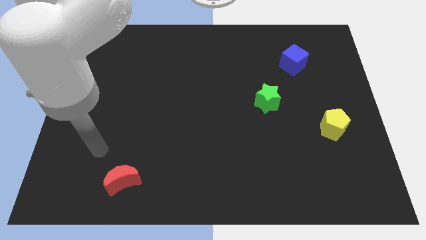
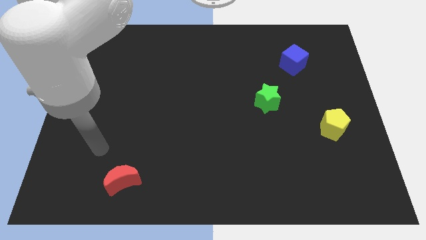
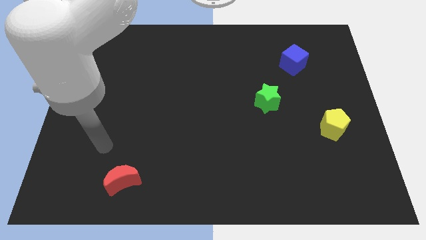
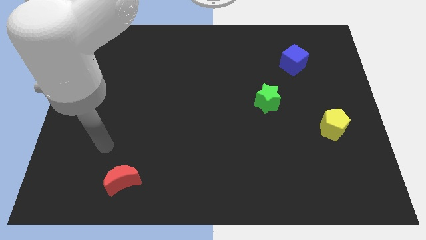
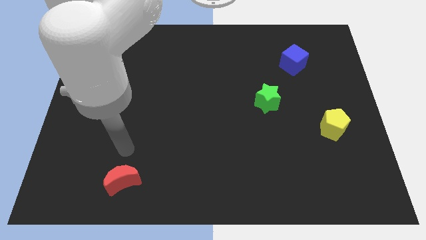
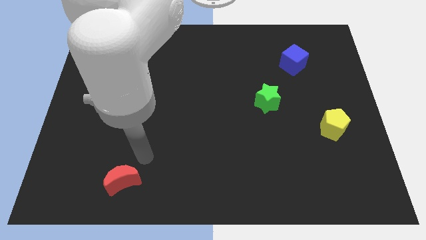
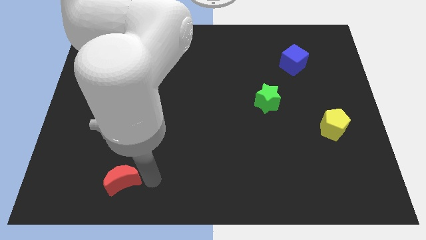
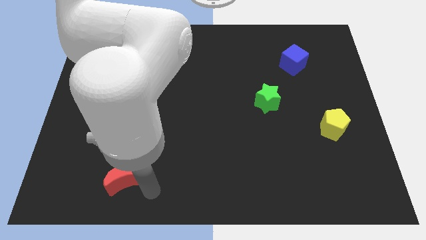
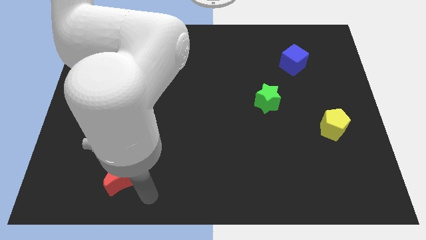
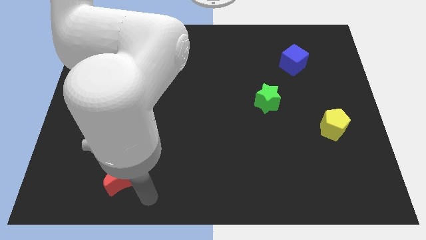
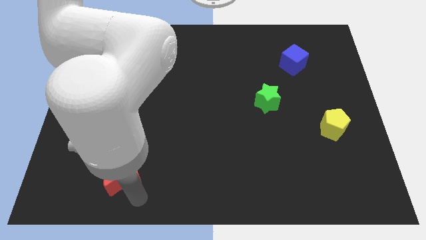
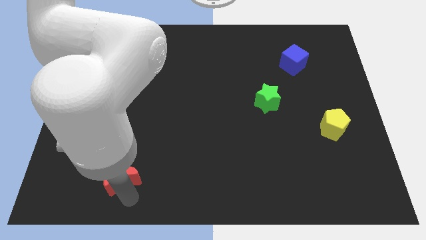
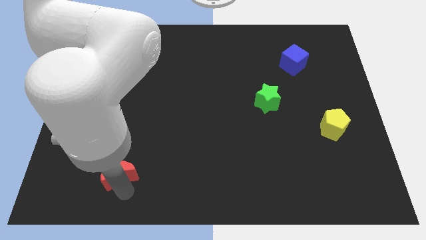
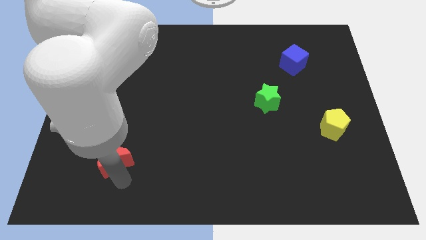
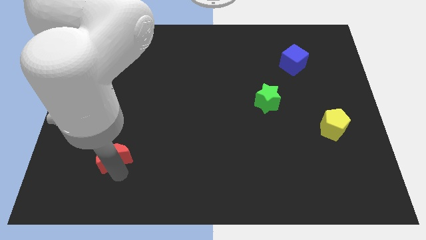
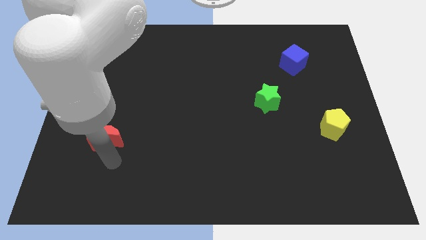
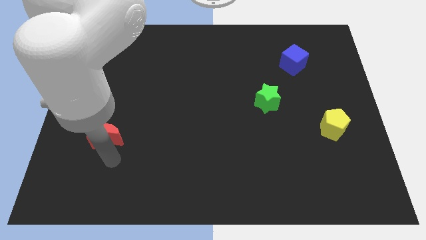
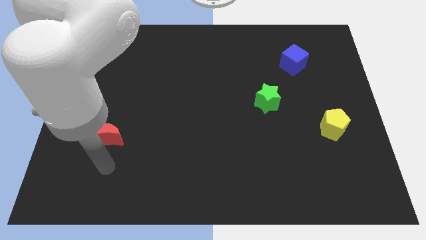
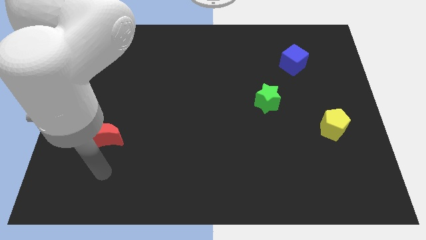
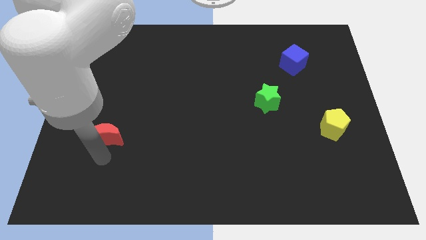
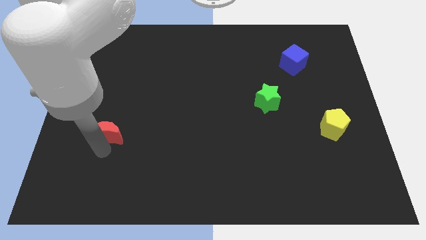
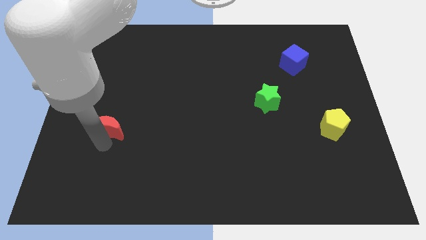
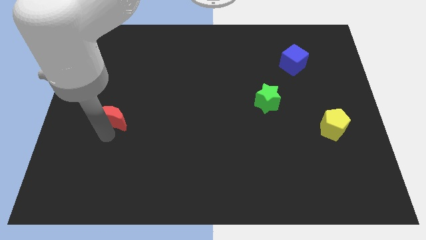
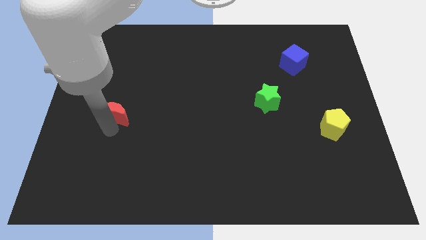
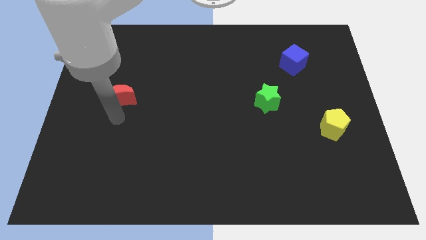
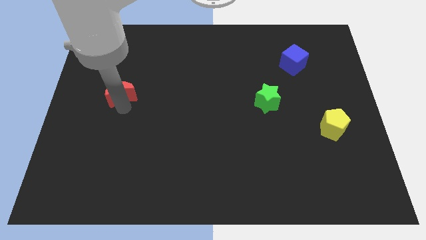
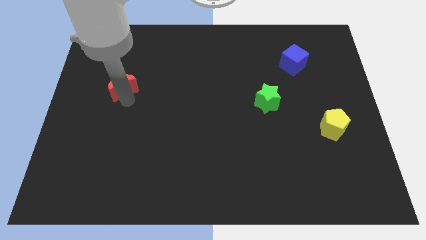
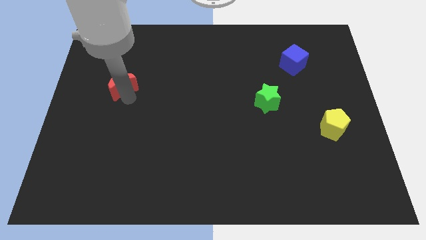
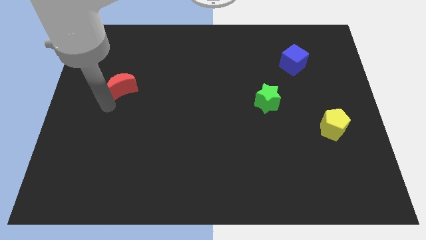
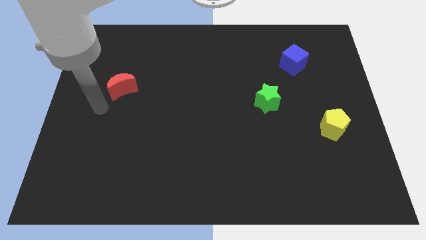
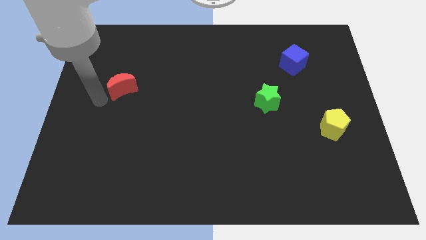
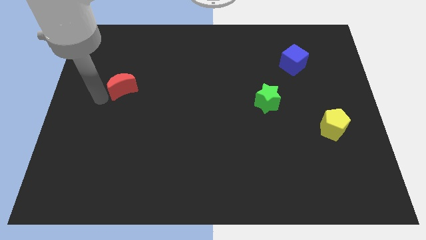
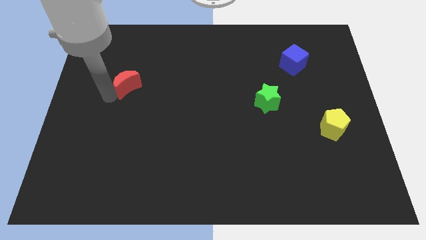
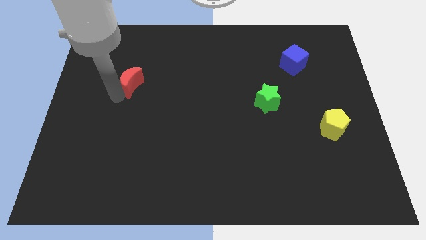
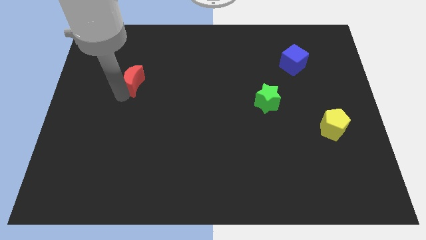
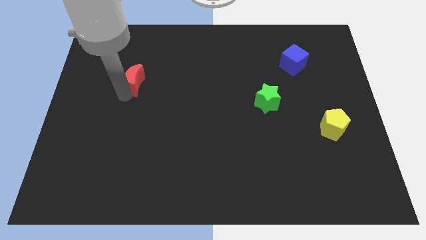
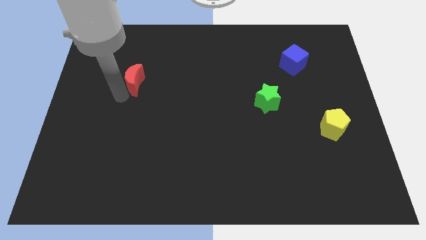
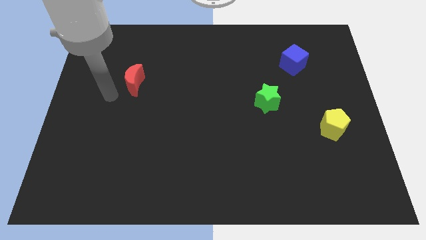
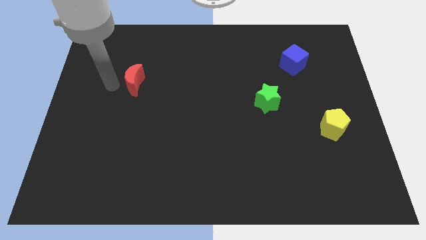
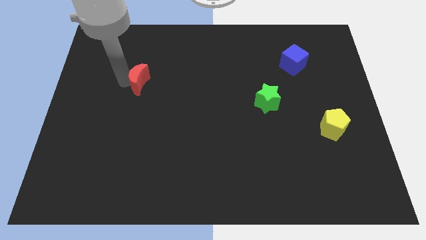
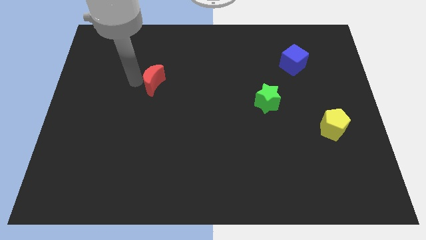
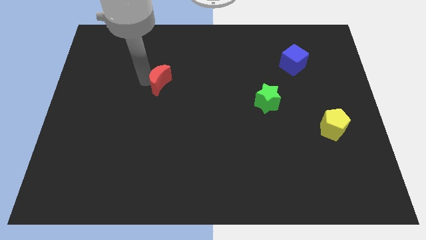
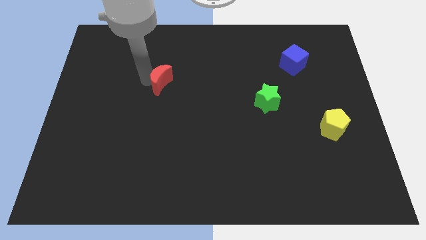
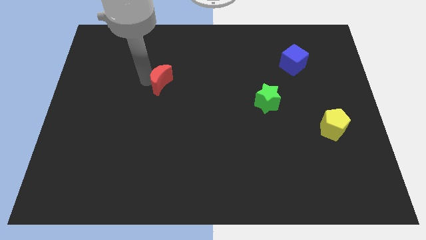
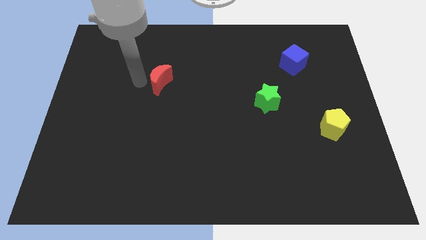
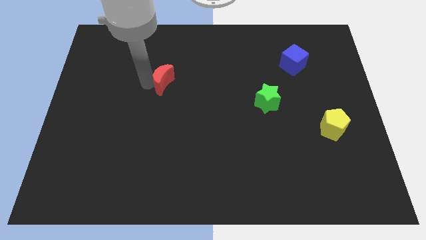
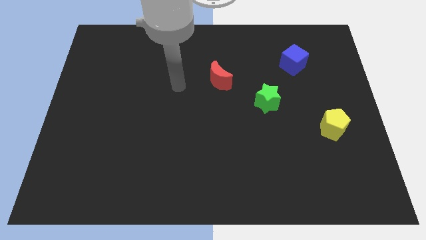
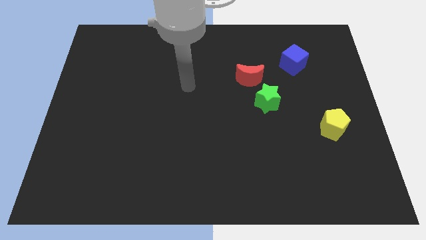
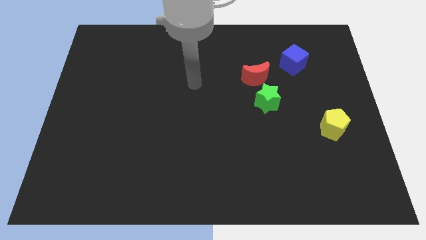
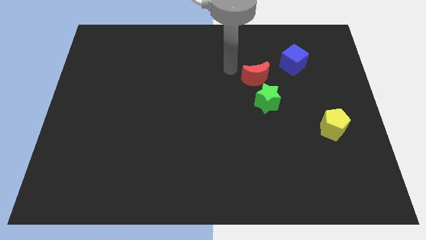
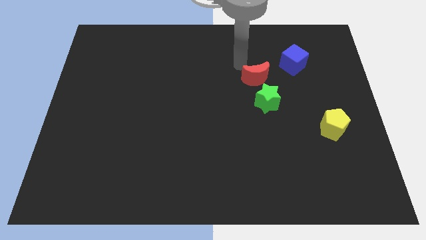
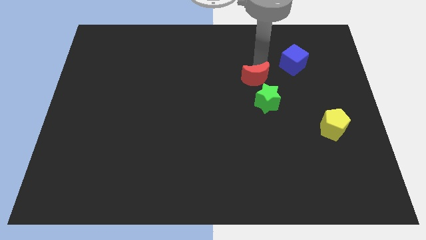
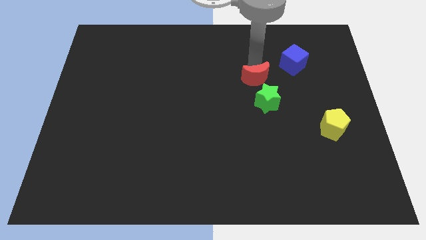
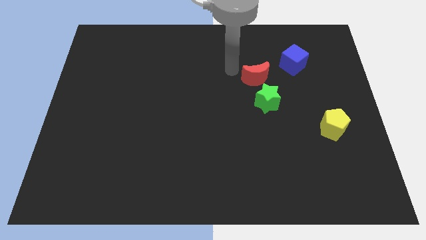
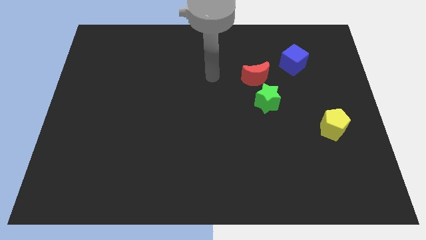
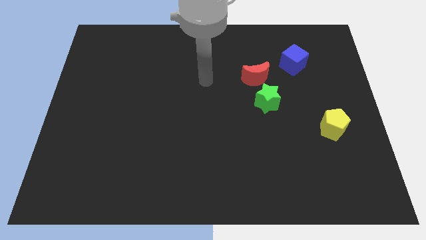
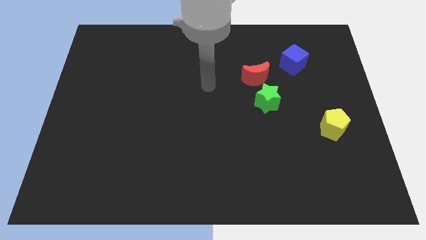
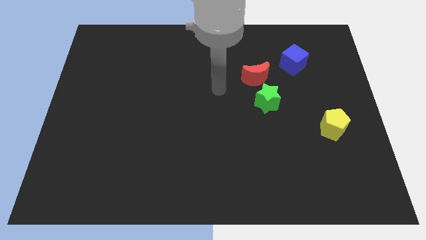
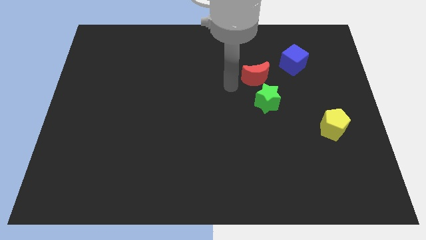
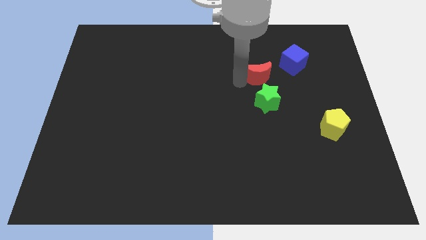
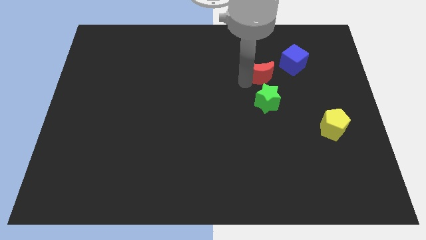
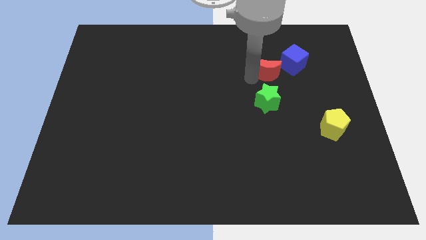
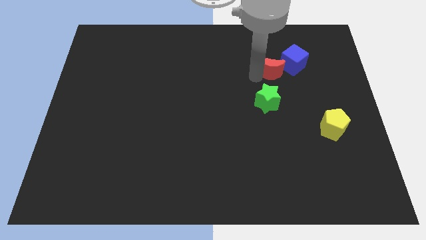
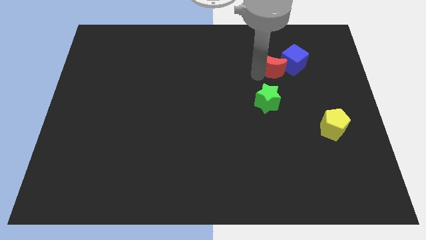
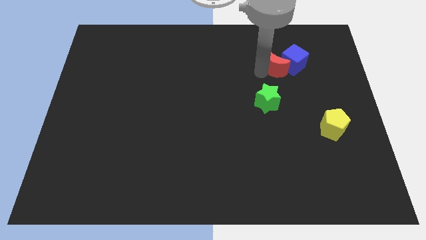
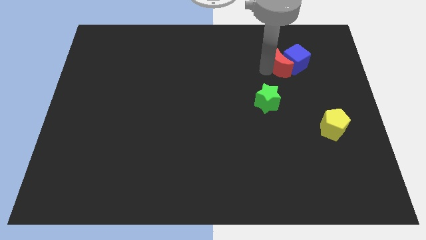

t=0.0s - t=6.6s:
move the moon to the blue block

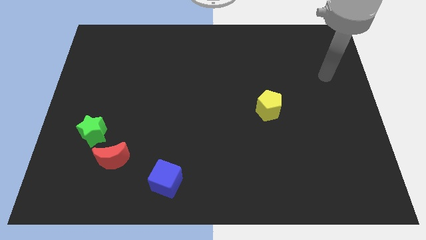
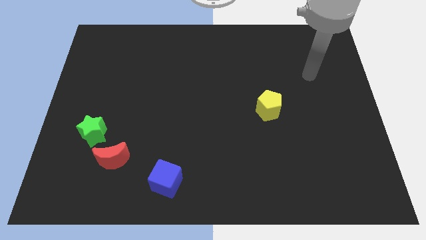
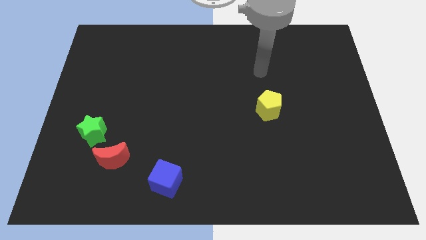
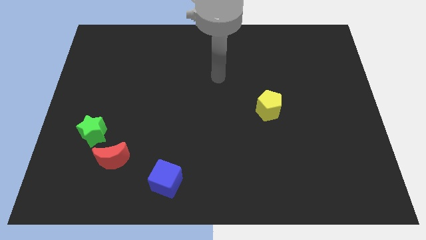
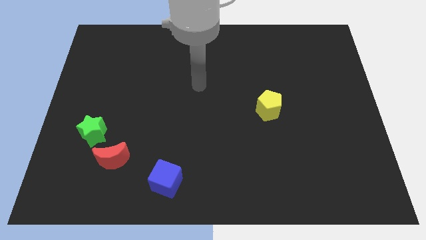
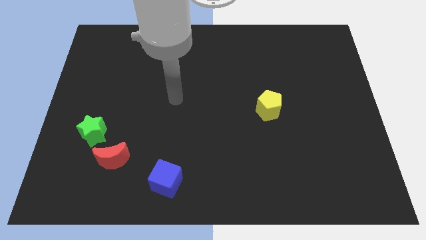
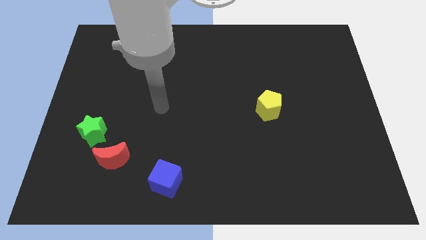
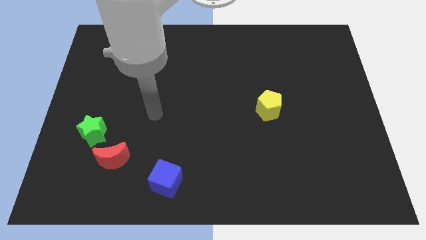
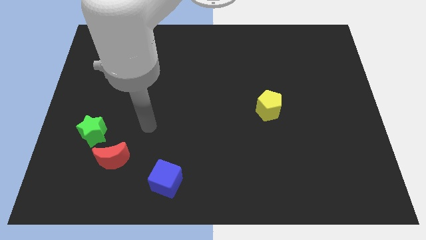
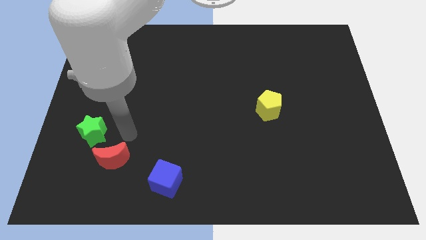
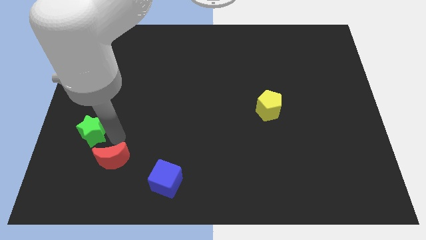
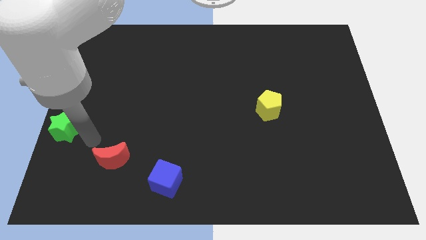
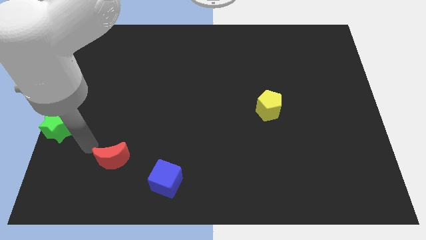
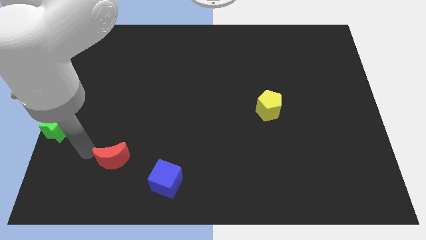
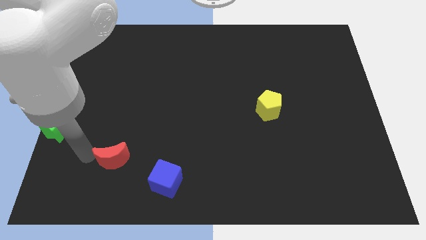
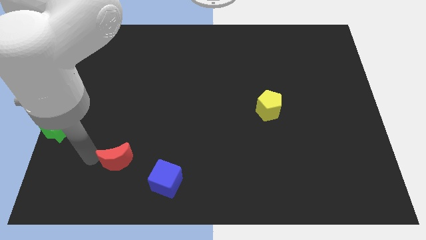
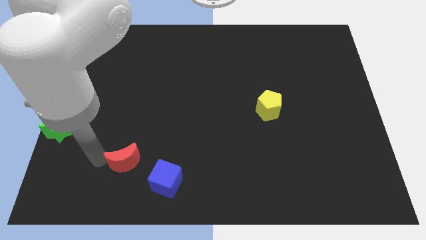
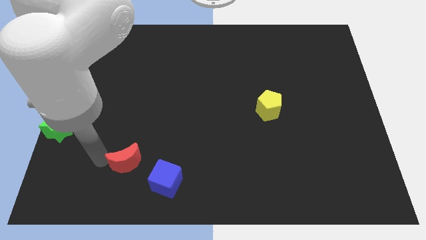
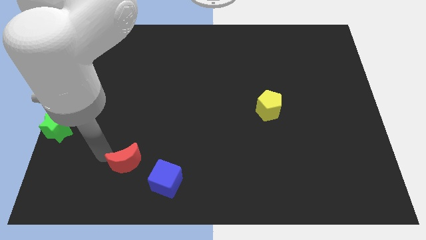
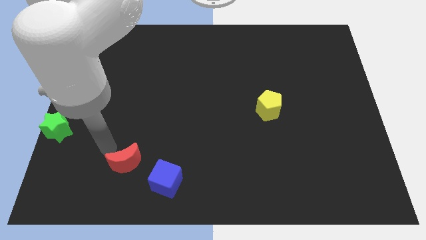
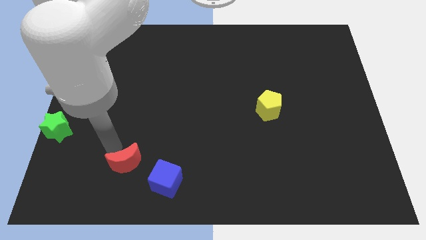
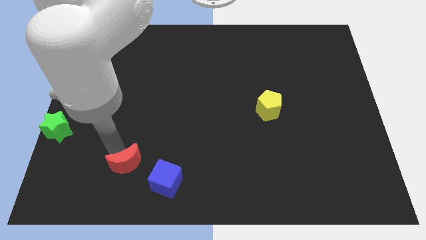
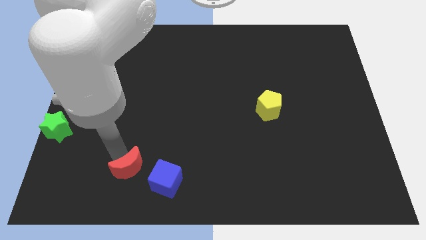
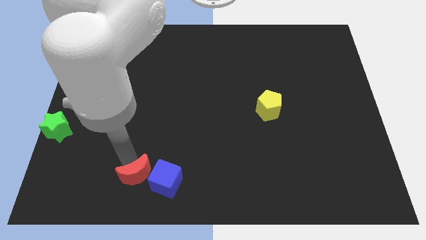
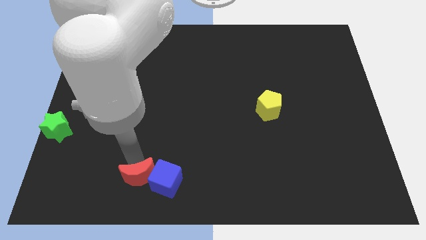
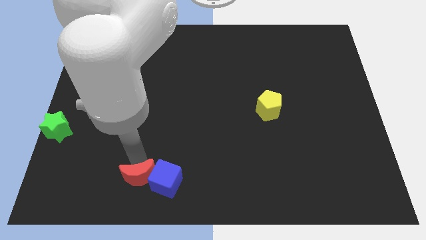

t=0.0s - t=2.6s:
put the moon next to the cube
